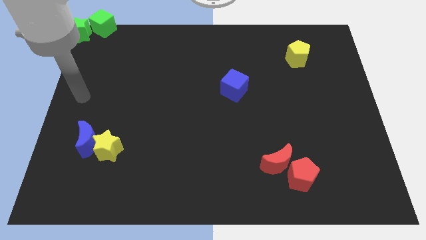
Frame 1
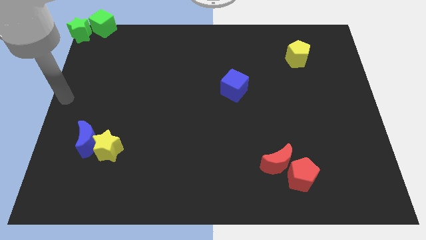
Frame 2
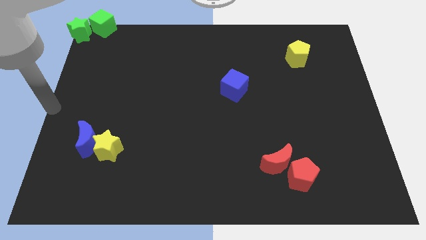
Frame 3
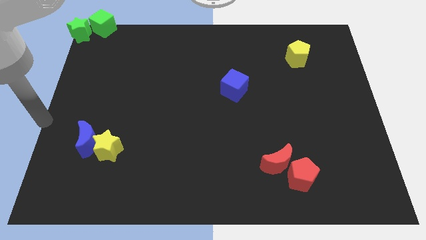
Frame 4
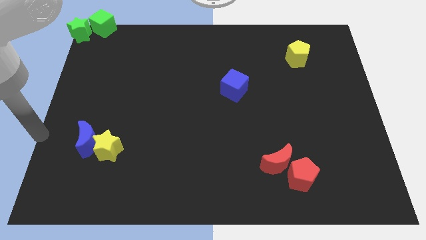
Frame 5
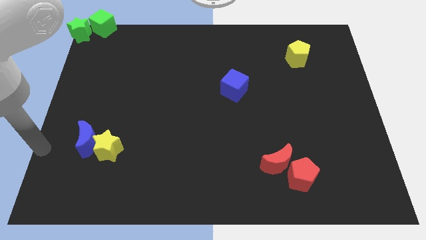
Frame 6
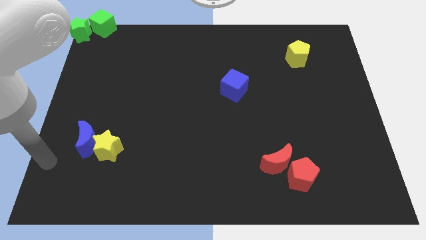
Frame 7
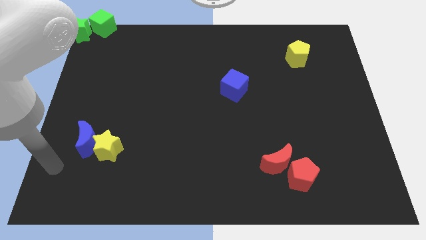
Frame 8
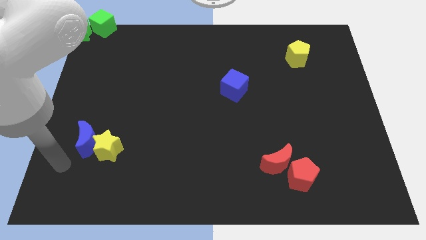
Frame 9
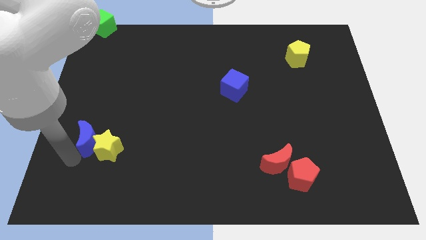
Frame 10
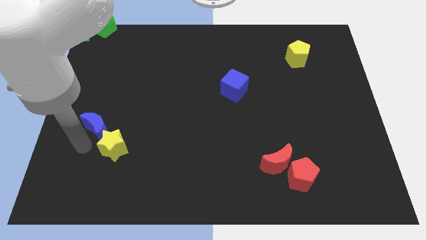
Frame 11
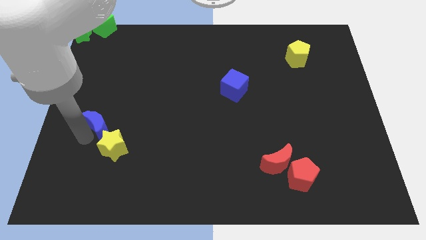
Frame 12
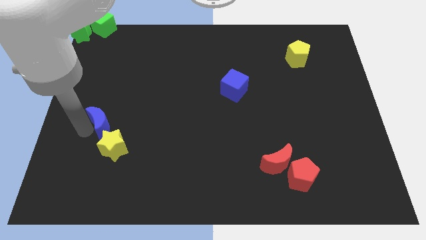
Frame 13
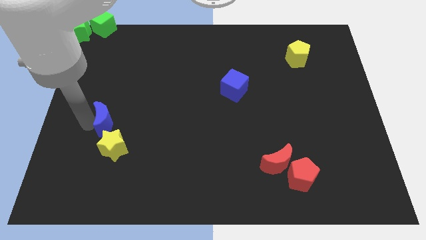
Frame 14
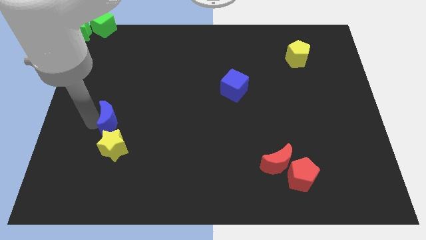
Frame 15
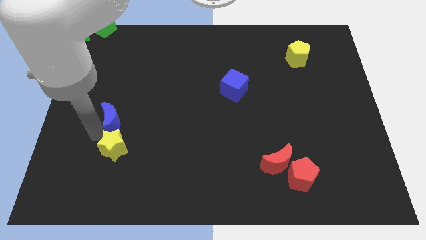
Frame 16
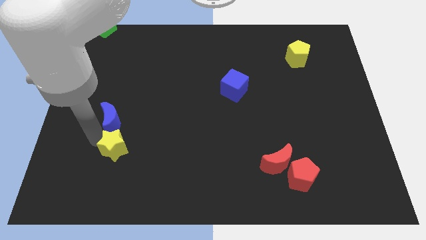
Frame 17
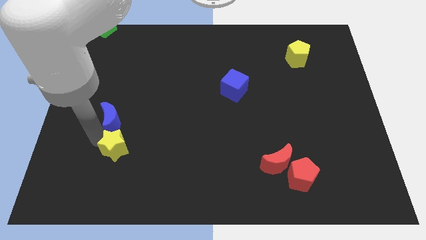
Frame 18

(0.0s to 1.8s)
push the blue moon to the top of the yellow star

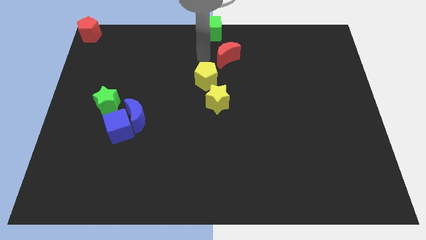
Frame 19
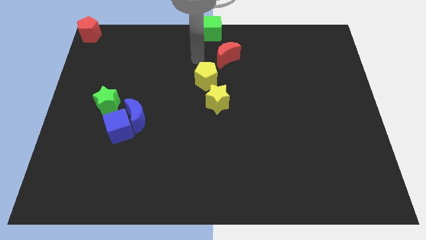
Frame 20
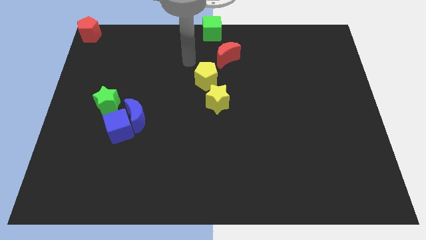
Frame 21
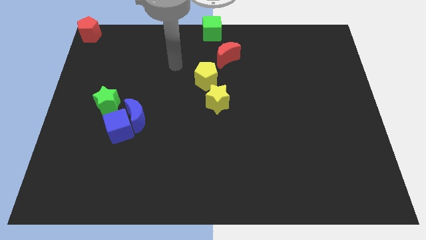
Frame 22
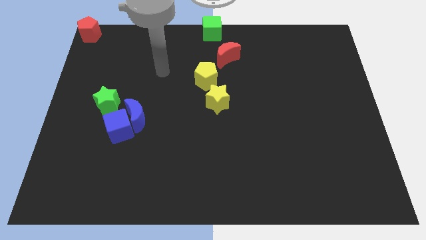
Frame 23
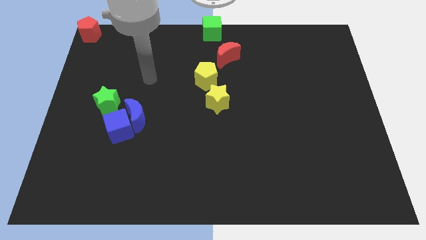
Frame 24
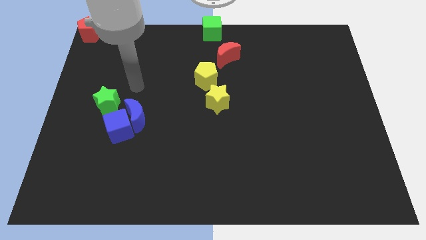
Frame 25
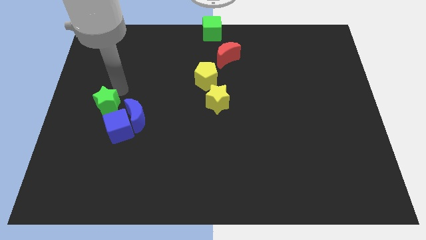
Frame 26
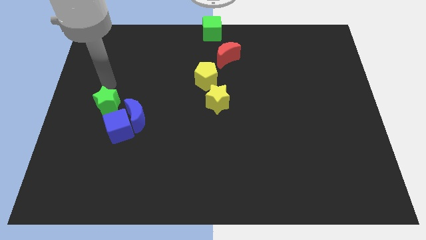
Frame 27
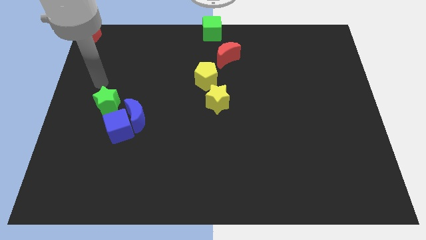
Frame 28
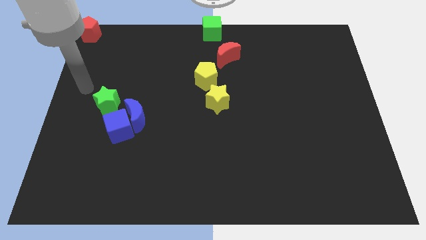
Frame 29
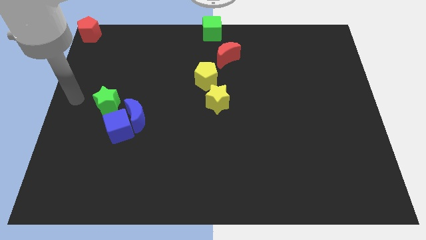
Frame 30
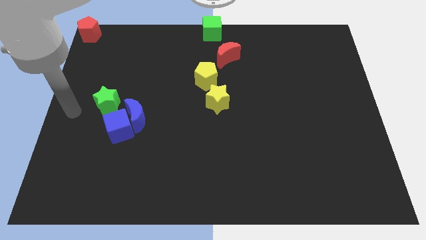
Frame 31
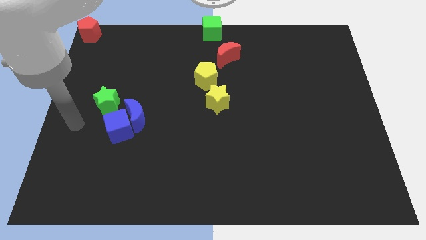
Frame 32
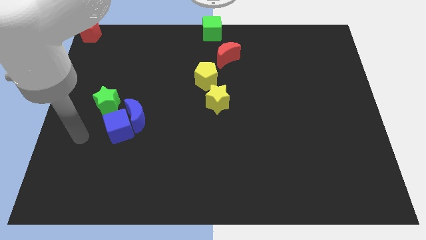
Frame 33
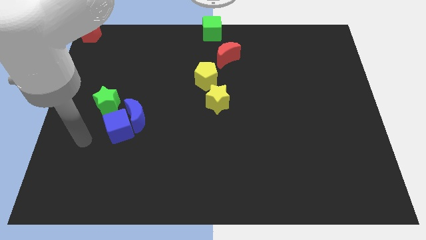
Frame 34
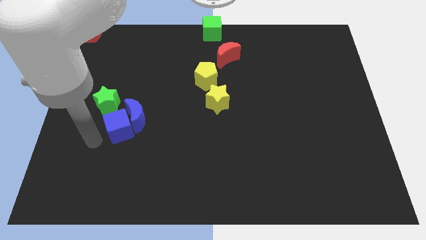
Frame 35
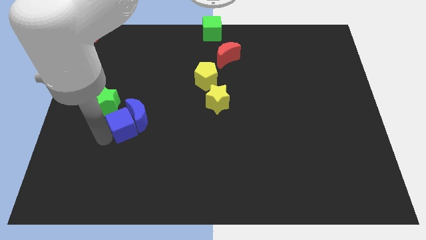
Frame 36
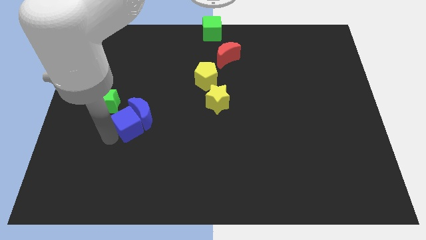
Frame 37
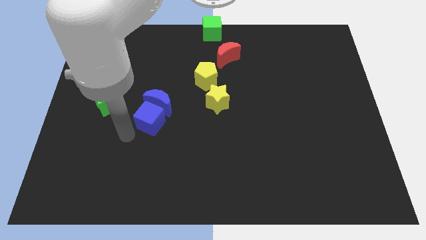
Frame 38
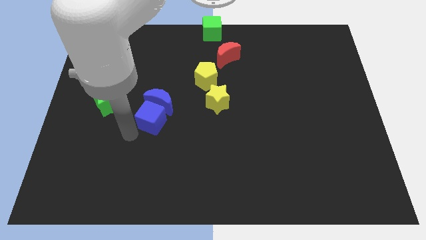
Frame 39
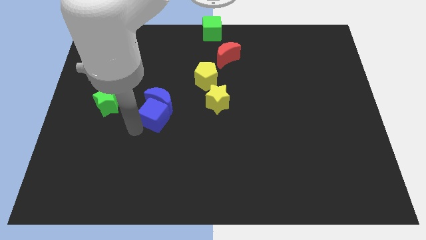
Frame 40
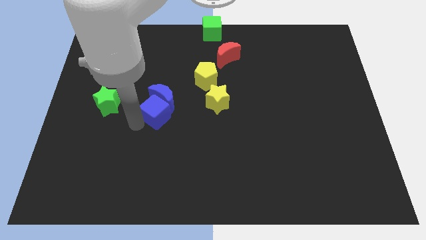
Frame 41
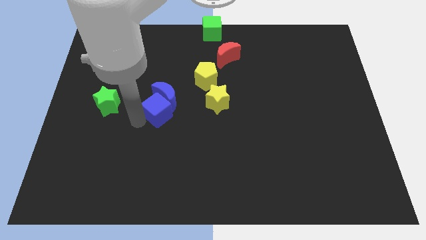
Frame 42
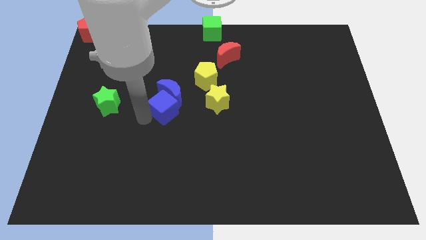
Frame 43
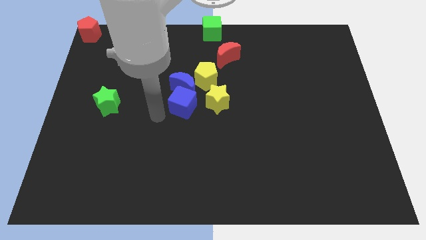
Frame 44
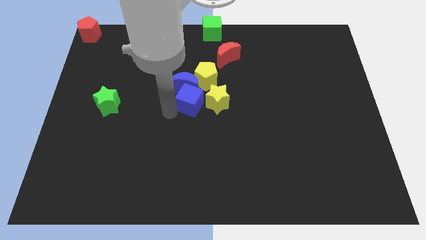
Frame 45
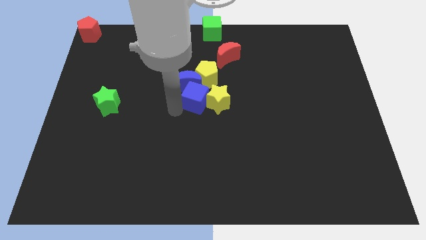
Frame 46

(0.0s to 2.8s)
move blue blocks towards the yellow blocks

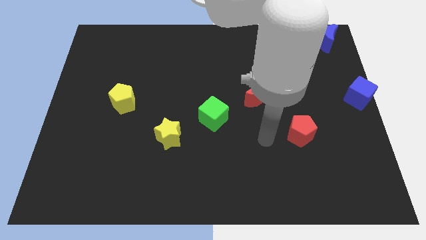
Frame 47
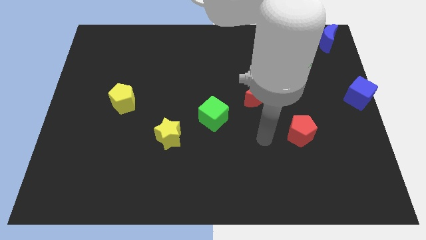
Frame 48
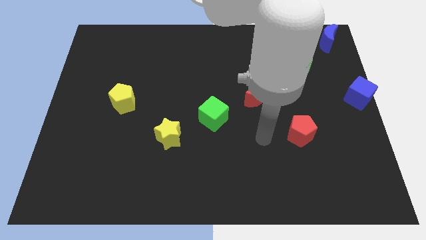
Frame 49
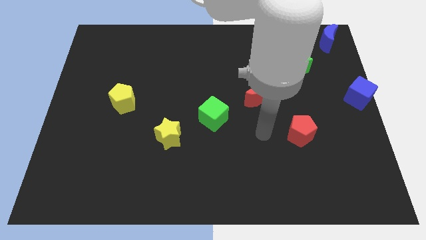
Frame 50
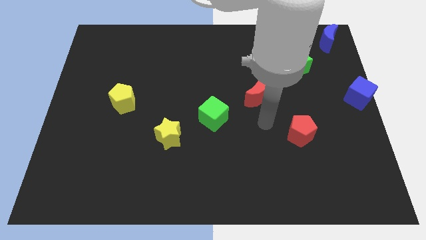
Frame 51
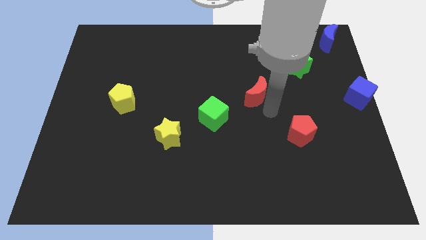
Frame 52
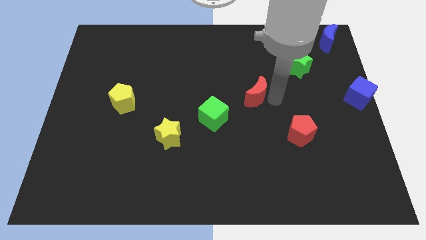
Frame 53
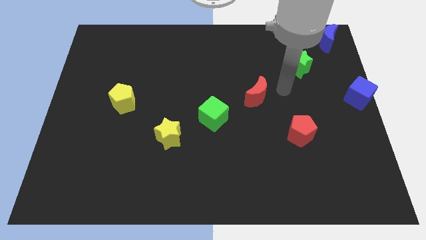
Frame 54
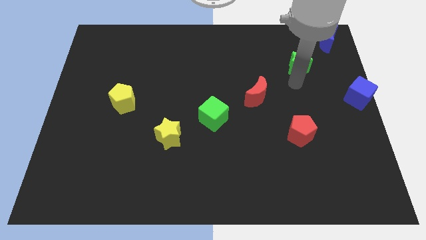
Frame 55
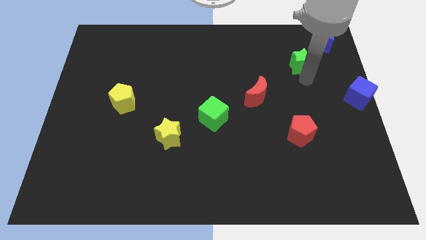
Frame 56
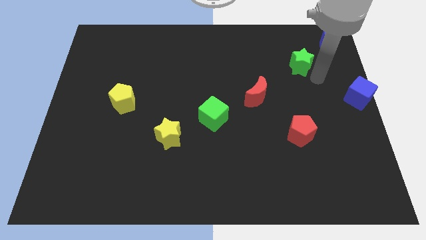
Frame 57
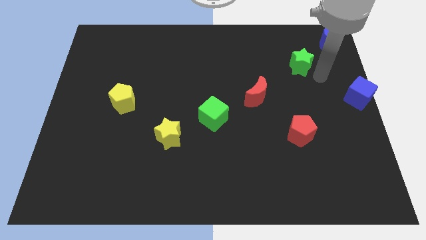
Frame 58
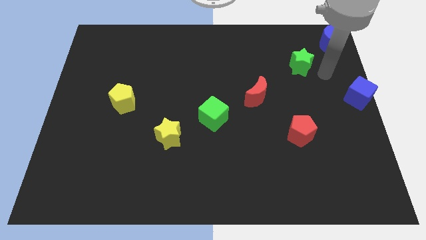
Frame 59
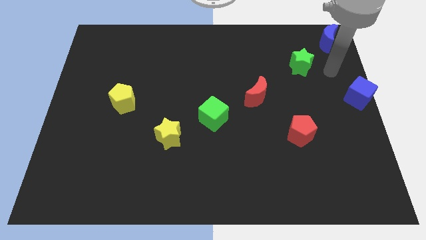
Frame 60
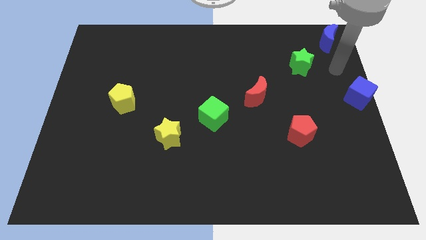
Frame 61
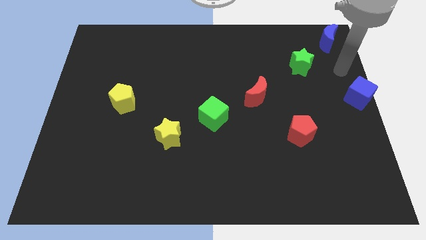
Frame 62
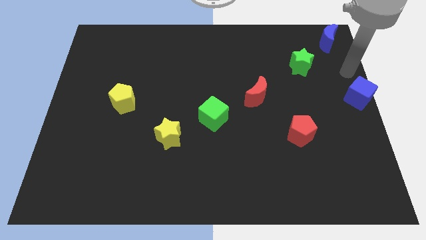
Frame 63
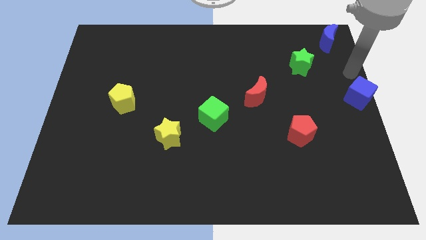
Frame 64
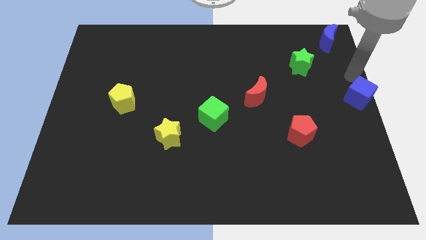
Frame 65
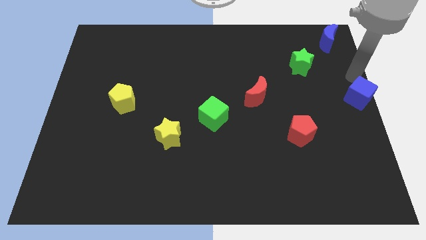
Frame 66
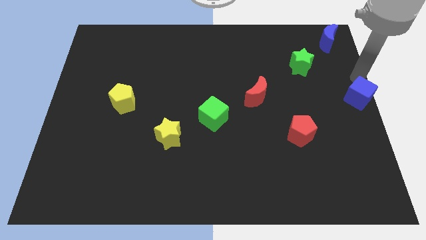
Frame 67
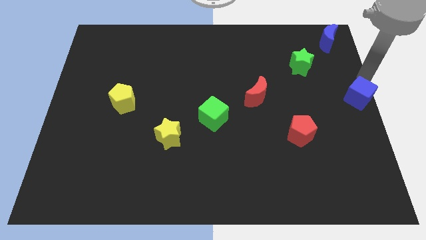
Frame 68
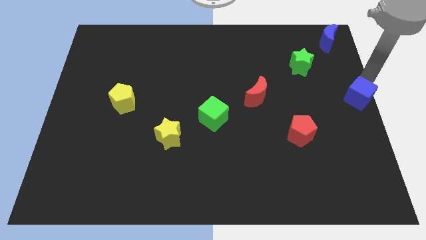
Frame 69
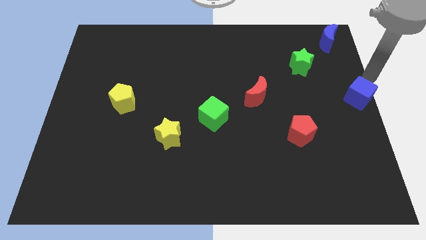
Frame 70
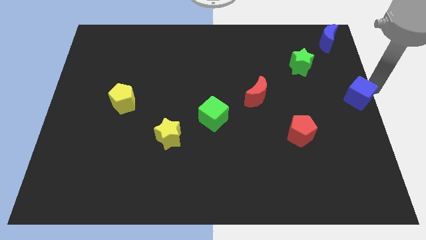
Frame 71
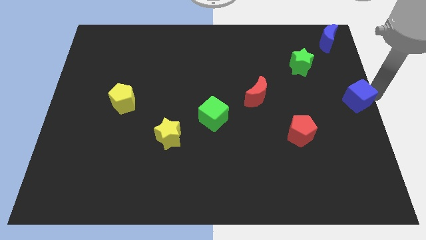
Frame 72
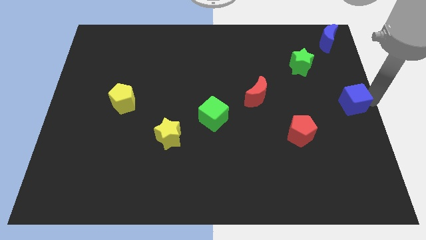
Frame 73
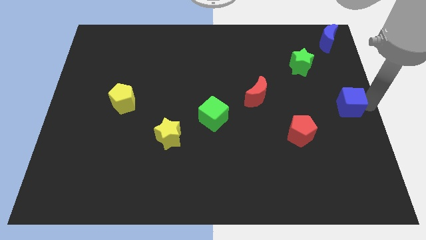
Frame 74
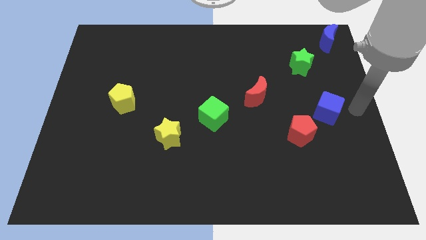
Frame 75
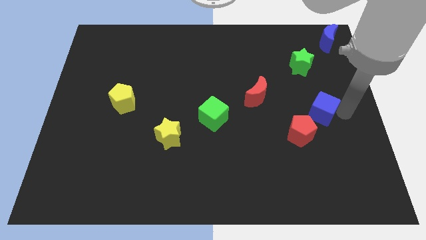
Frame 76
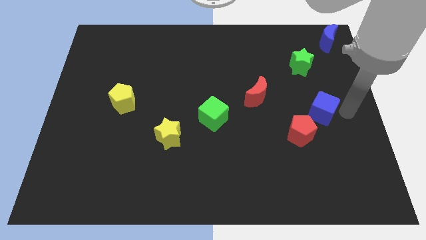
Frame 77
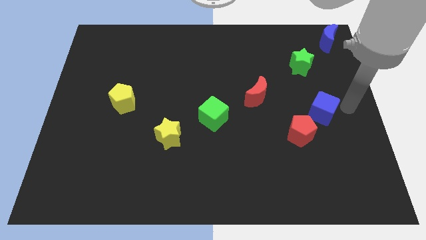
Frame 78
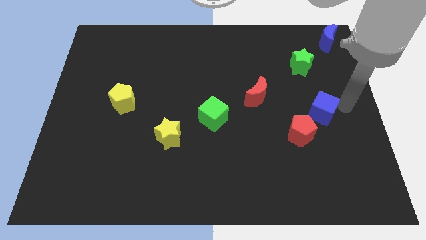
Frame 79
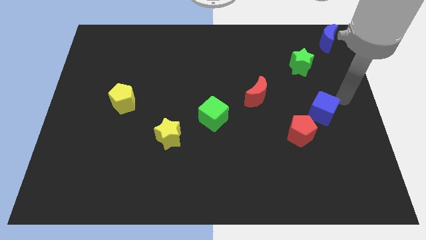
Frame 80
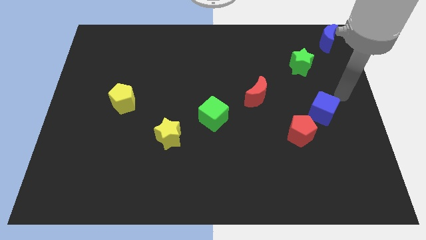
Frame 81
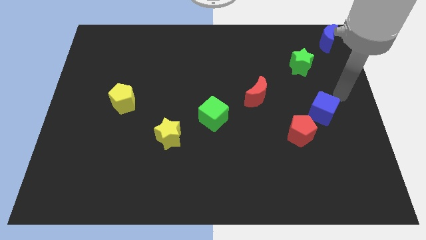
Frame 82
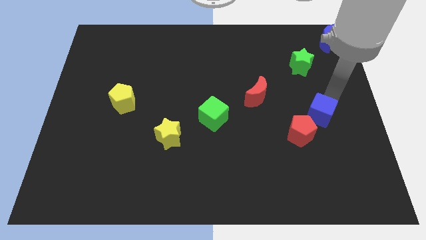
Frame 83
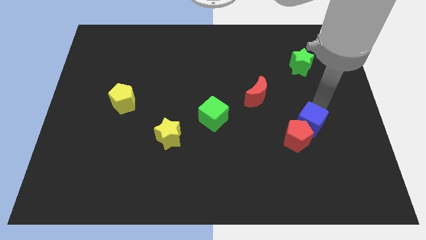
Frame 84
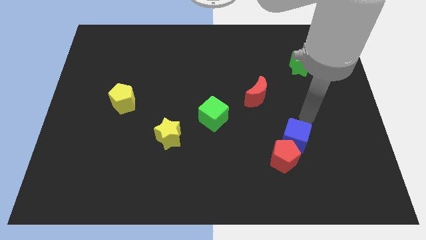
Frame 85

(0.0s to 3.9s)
slide the blue cube into the red pentagon

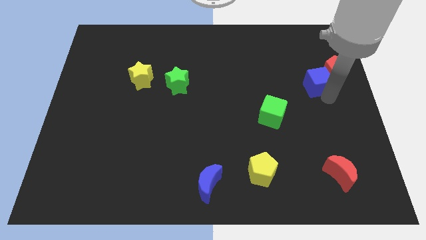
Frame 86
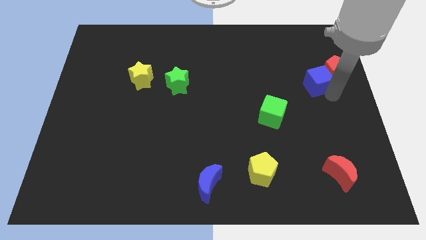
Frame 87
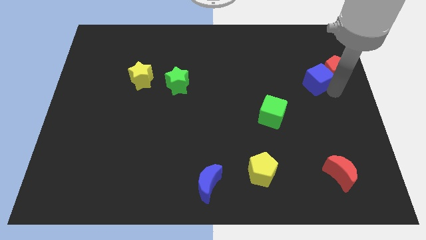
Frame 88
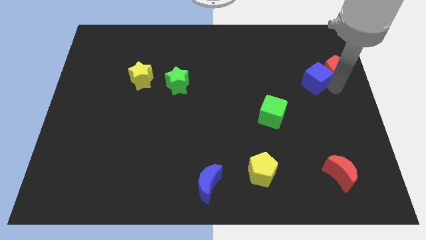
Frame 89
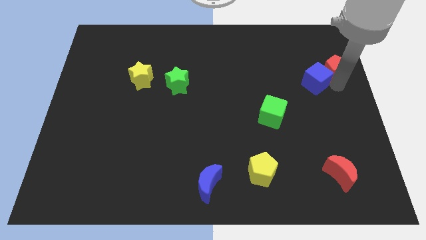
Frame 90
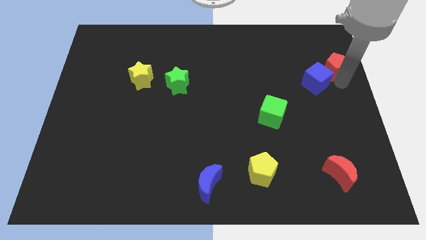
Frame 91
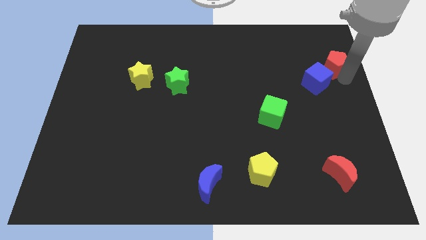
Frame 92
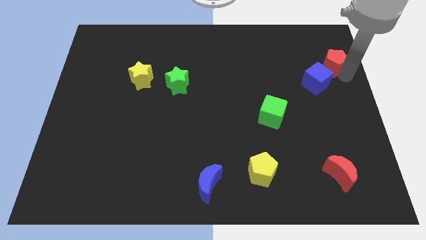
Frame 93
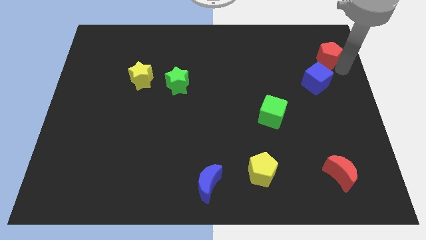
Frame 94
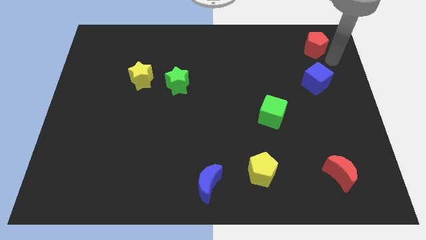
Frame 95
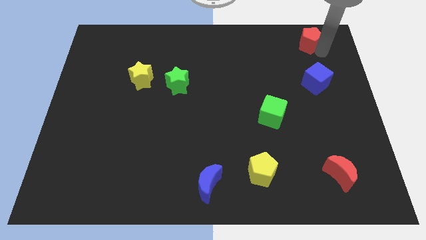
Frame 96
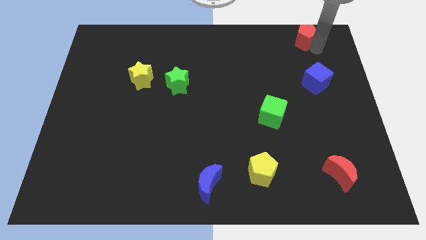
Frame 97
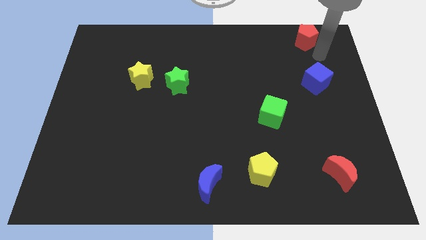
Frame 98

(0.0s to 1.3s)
place red pentagon to the top of blue cube
